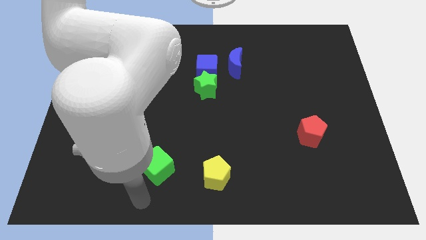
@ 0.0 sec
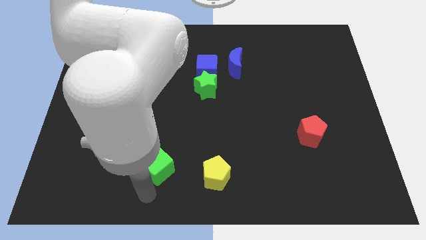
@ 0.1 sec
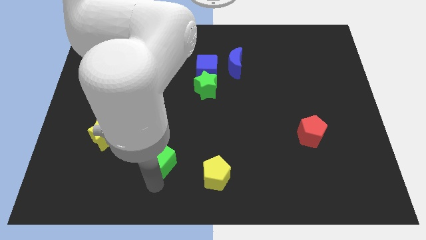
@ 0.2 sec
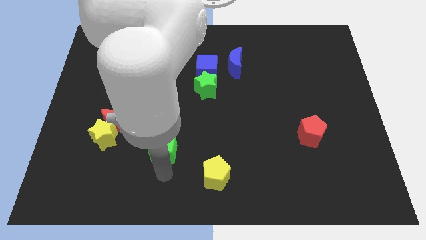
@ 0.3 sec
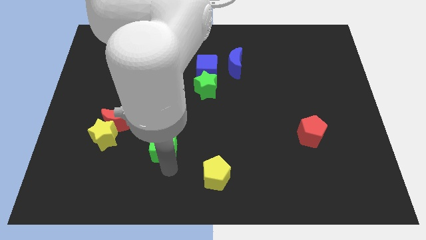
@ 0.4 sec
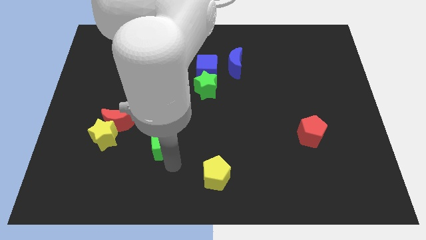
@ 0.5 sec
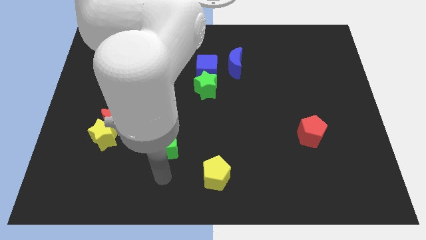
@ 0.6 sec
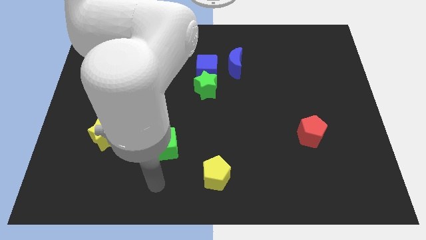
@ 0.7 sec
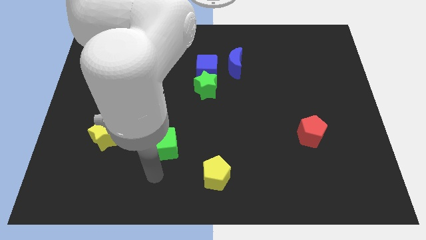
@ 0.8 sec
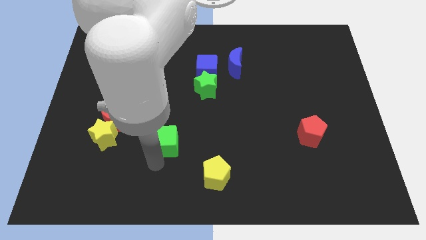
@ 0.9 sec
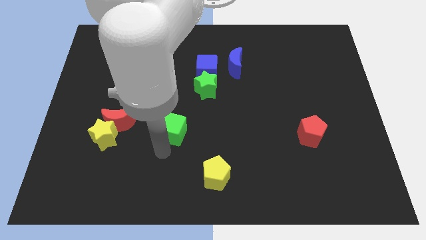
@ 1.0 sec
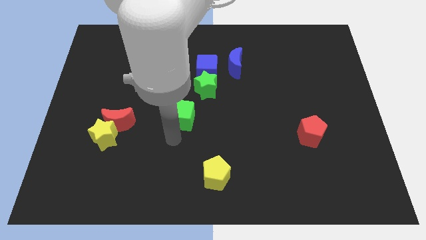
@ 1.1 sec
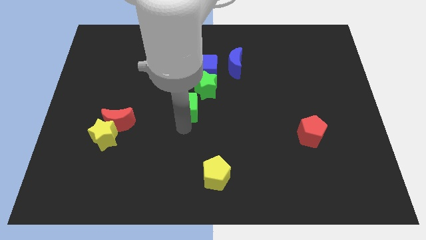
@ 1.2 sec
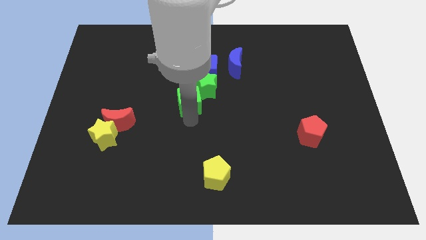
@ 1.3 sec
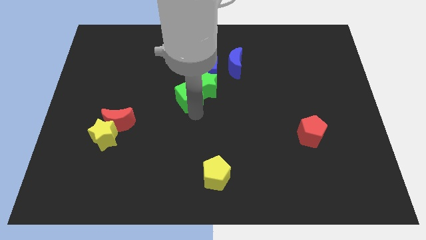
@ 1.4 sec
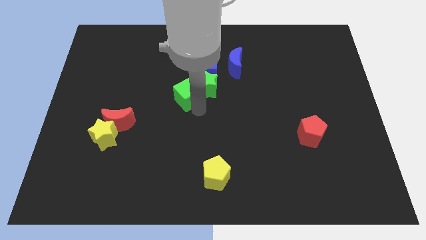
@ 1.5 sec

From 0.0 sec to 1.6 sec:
push the green cube into green star

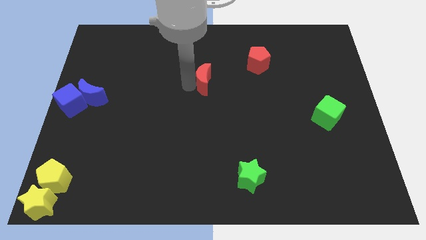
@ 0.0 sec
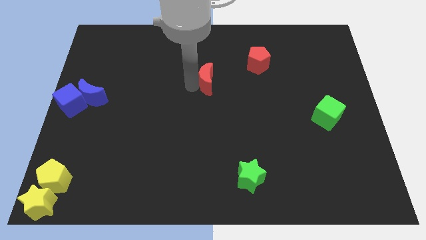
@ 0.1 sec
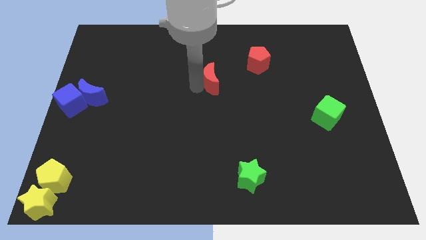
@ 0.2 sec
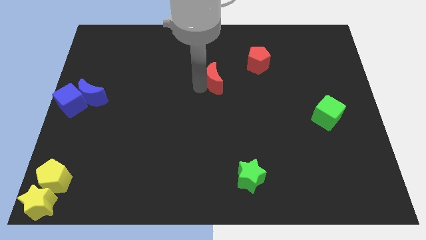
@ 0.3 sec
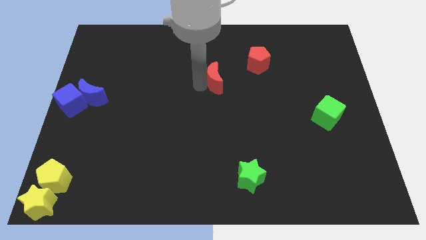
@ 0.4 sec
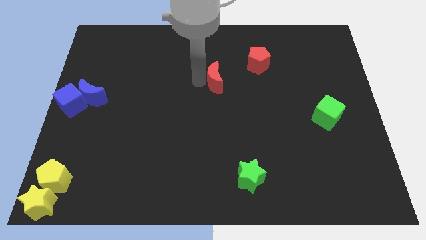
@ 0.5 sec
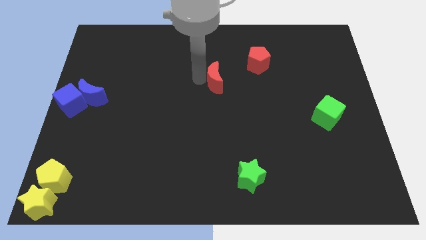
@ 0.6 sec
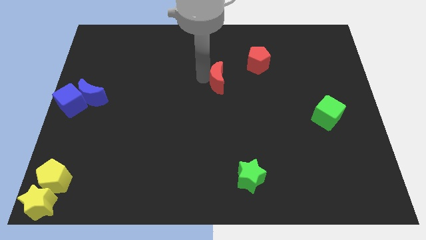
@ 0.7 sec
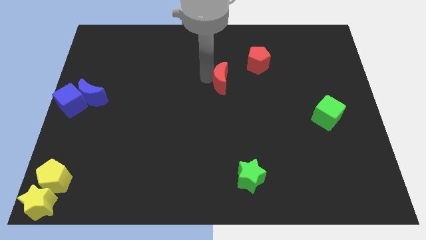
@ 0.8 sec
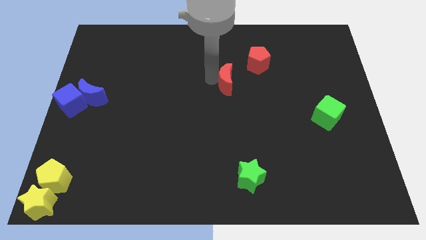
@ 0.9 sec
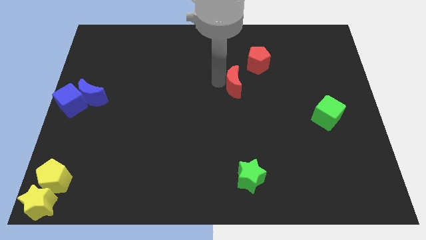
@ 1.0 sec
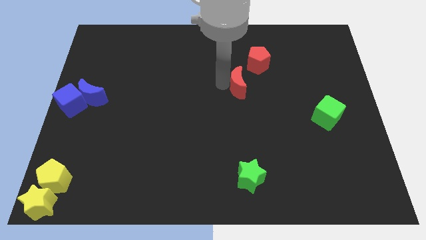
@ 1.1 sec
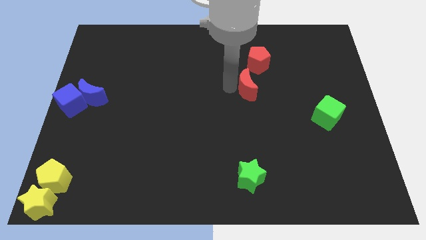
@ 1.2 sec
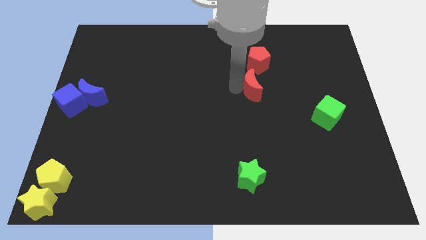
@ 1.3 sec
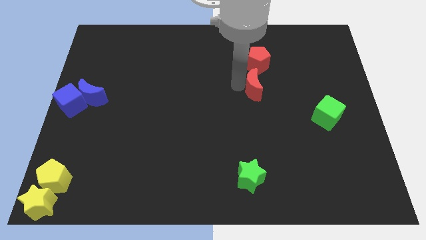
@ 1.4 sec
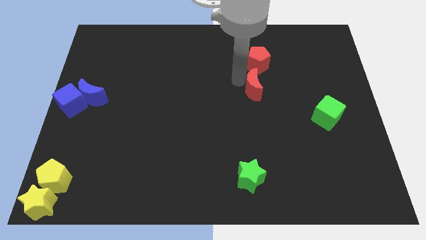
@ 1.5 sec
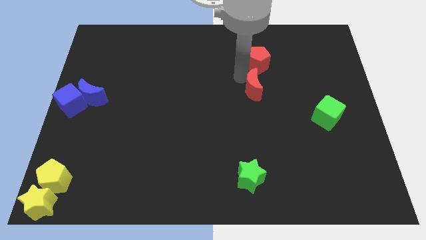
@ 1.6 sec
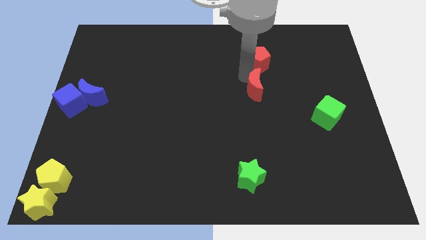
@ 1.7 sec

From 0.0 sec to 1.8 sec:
move the red crescent below the red pentagon

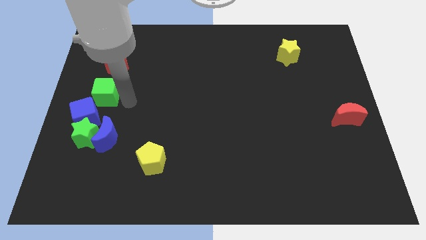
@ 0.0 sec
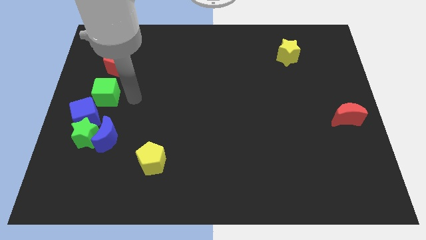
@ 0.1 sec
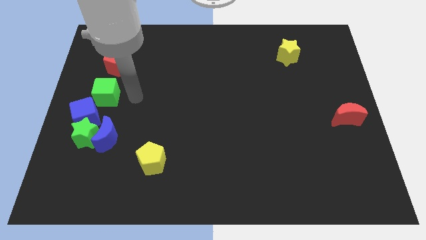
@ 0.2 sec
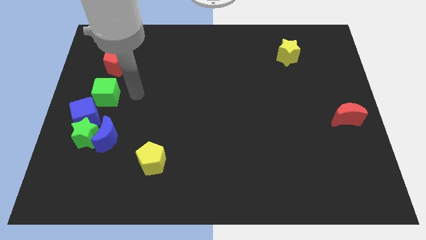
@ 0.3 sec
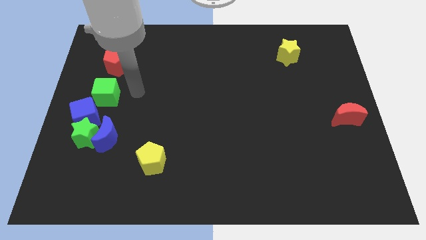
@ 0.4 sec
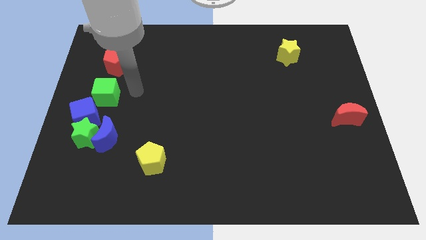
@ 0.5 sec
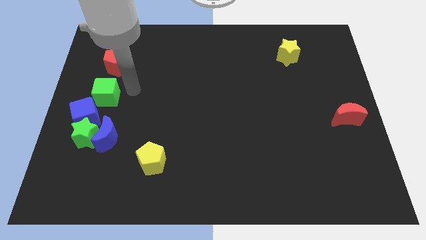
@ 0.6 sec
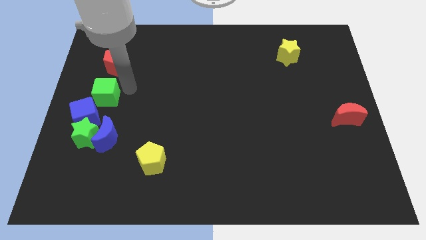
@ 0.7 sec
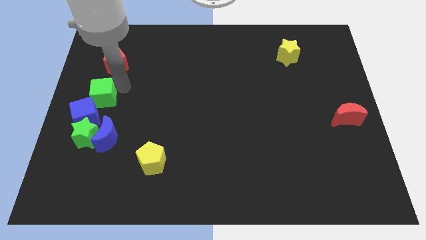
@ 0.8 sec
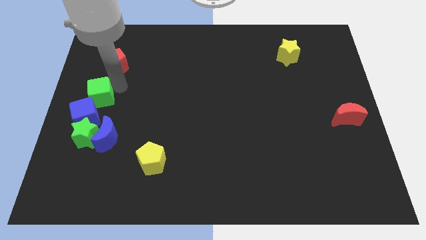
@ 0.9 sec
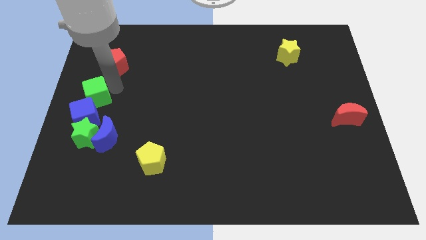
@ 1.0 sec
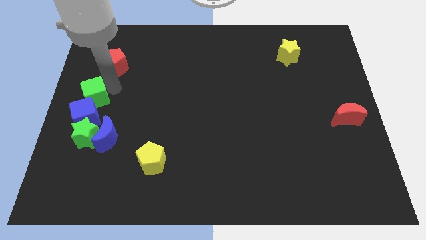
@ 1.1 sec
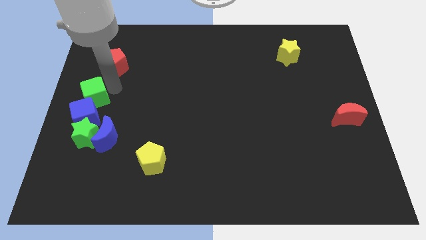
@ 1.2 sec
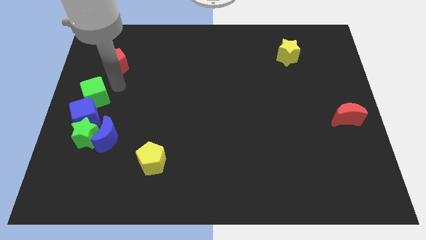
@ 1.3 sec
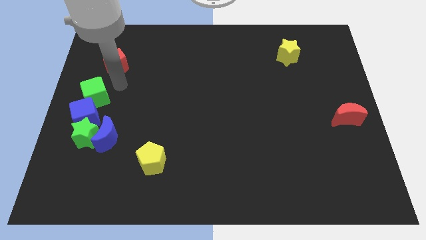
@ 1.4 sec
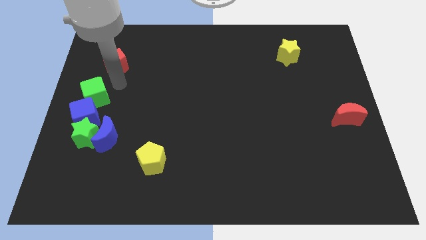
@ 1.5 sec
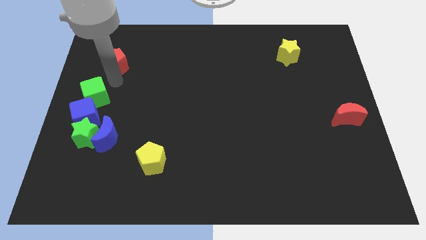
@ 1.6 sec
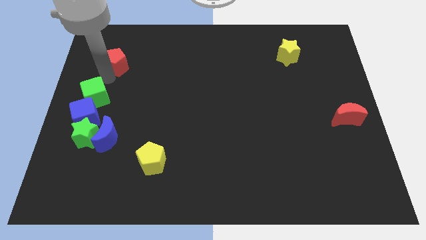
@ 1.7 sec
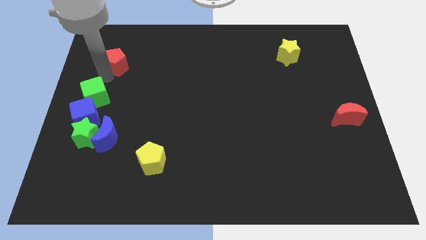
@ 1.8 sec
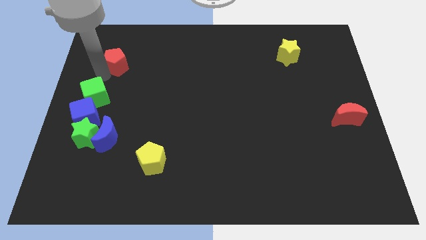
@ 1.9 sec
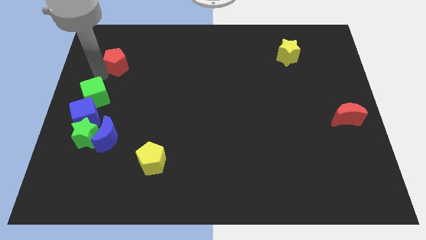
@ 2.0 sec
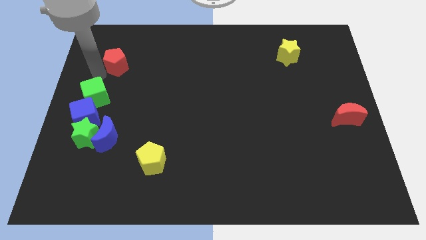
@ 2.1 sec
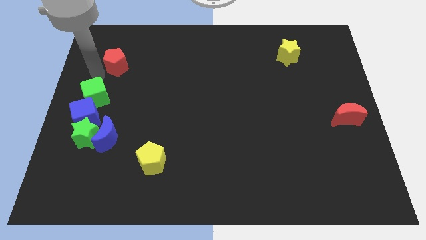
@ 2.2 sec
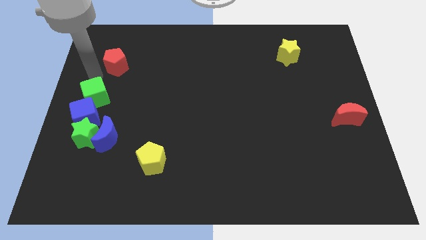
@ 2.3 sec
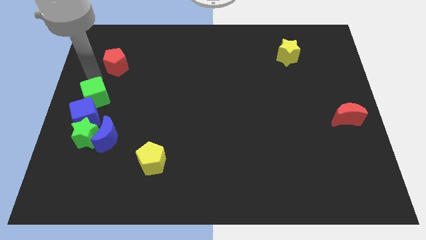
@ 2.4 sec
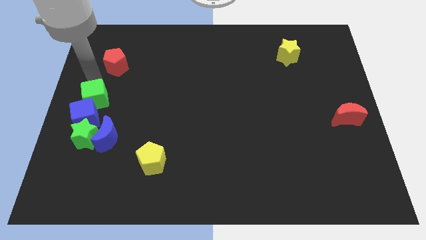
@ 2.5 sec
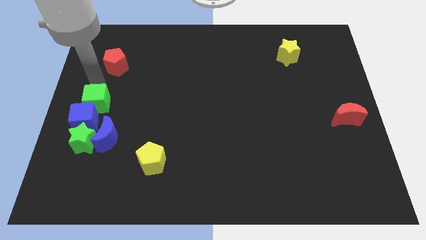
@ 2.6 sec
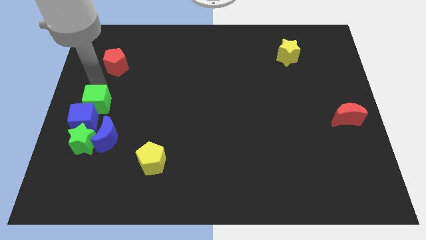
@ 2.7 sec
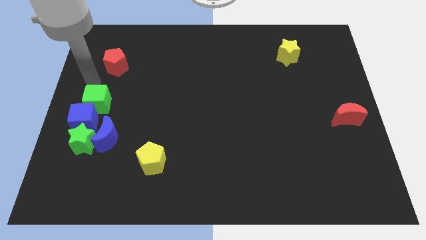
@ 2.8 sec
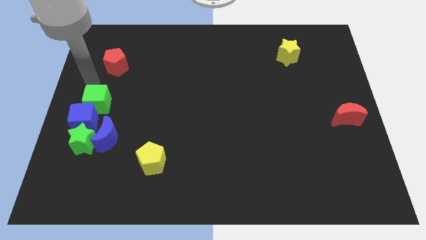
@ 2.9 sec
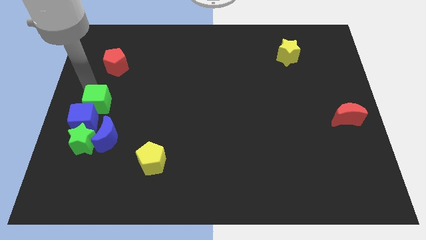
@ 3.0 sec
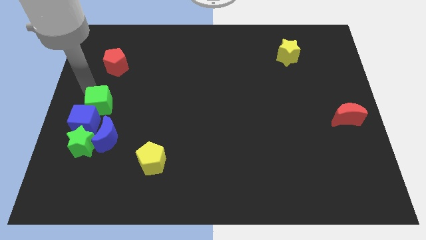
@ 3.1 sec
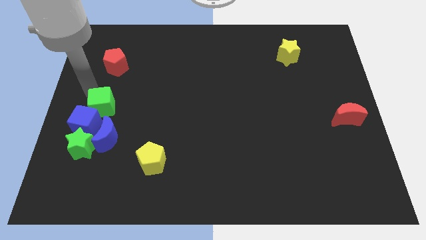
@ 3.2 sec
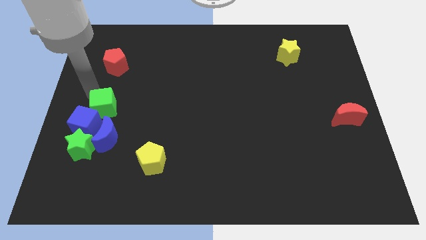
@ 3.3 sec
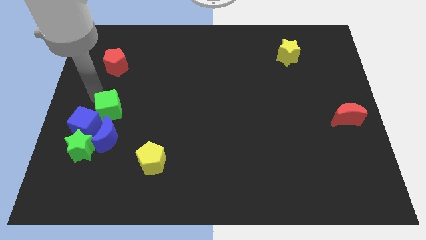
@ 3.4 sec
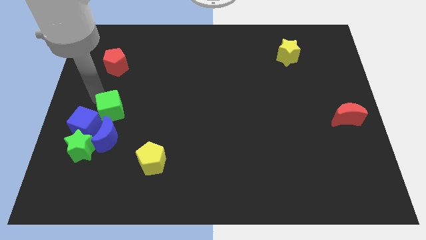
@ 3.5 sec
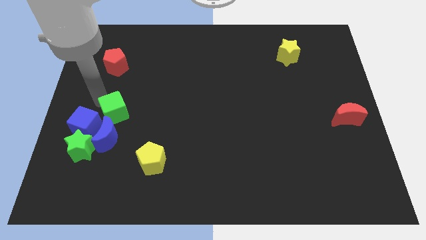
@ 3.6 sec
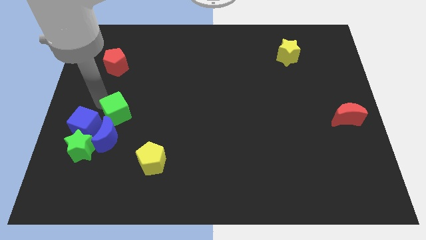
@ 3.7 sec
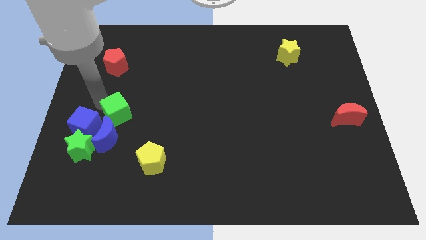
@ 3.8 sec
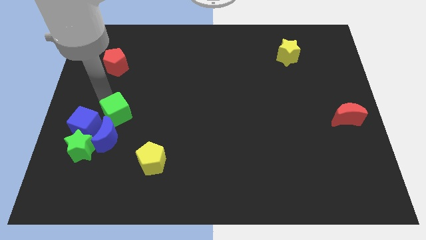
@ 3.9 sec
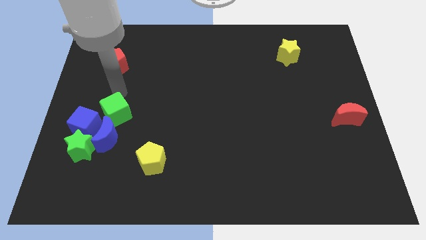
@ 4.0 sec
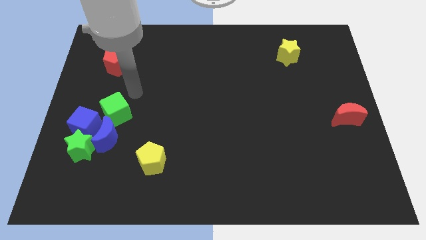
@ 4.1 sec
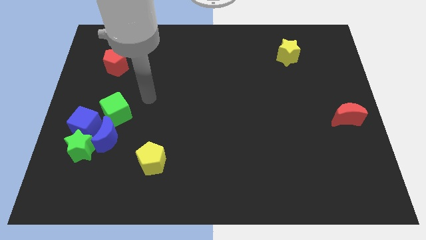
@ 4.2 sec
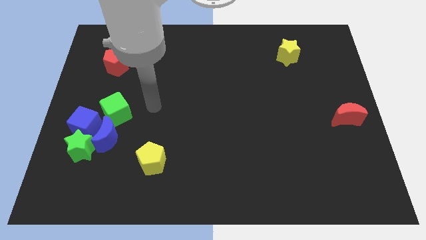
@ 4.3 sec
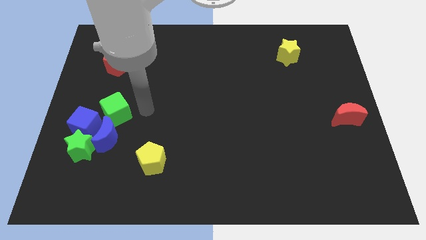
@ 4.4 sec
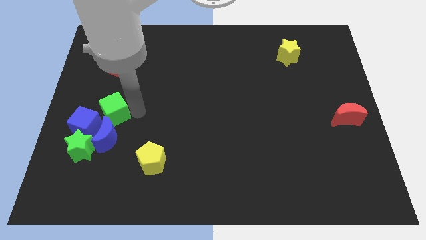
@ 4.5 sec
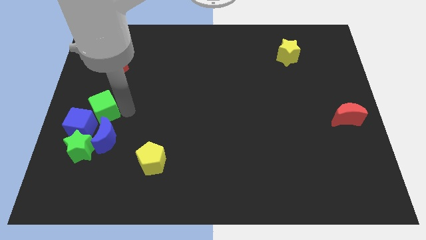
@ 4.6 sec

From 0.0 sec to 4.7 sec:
make a group of blue blocks and green blocks

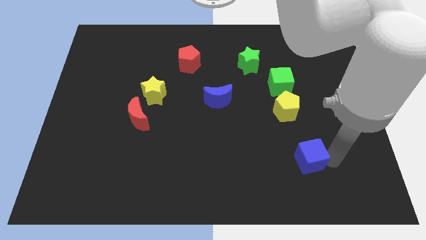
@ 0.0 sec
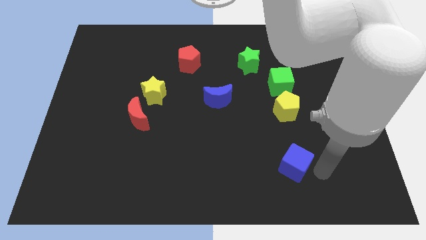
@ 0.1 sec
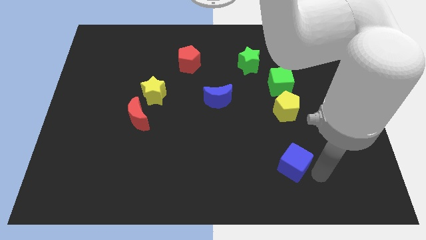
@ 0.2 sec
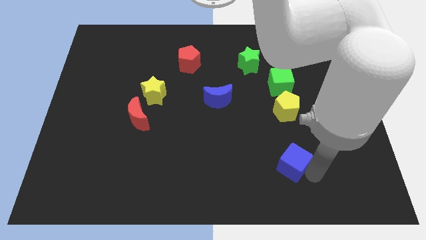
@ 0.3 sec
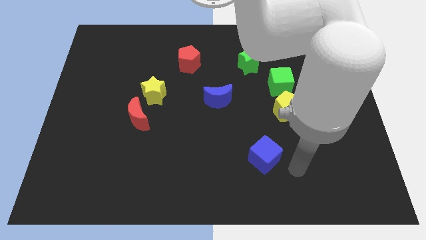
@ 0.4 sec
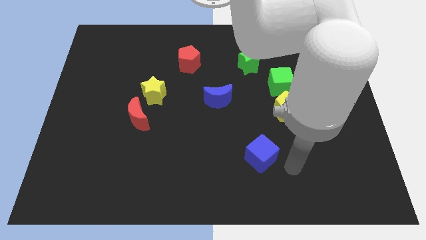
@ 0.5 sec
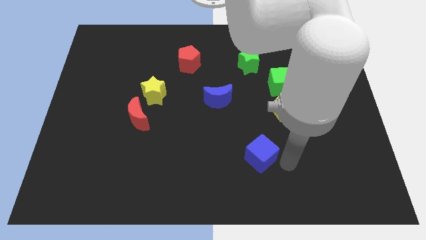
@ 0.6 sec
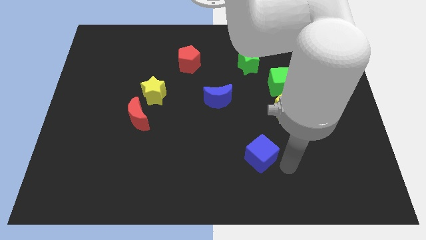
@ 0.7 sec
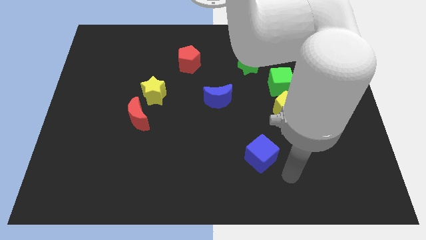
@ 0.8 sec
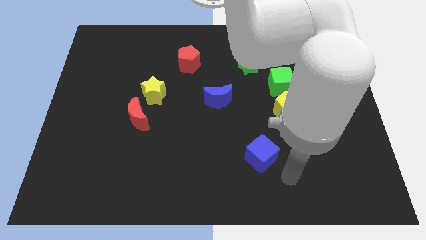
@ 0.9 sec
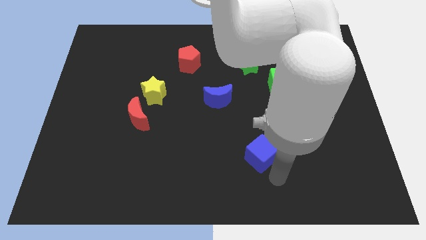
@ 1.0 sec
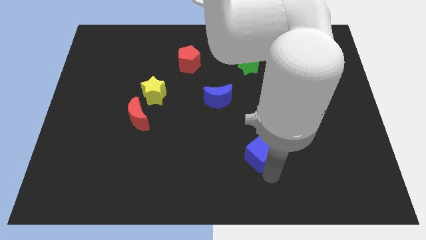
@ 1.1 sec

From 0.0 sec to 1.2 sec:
drag blue cube towards left side of the board
